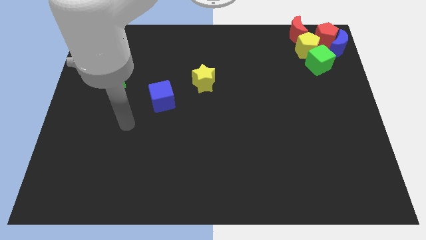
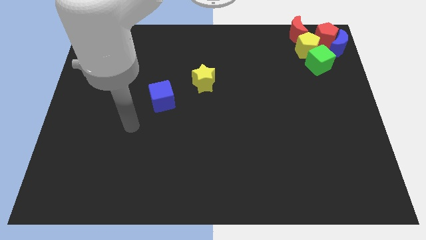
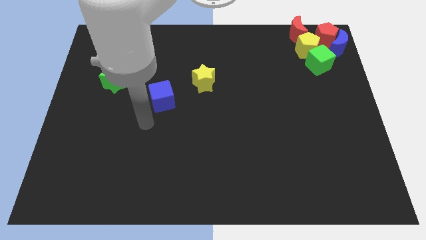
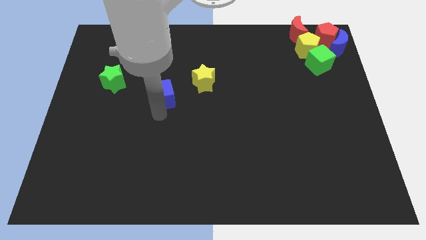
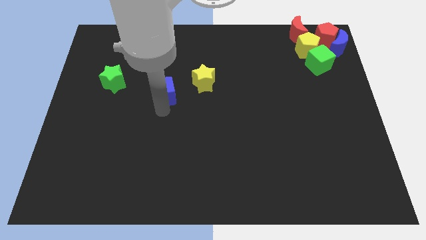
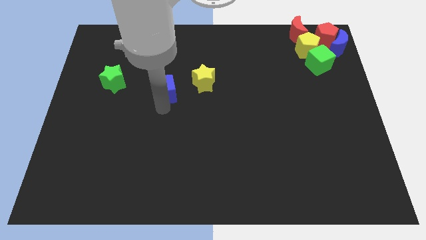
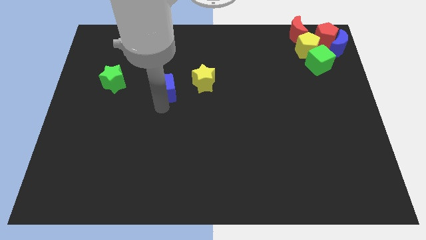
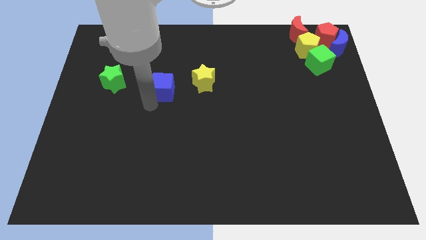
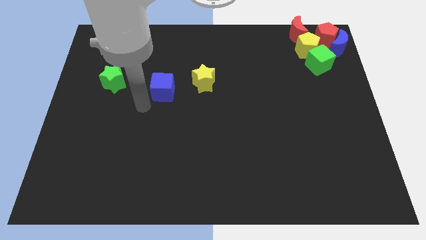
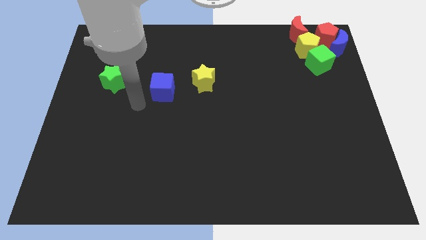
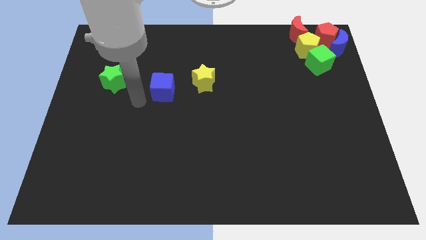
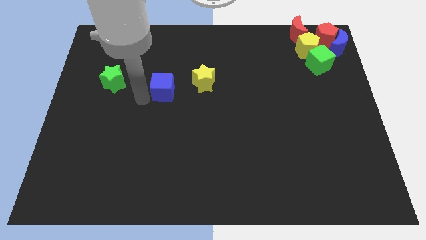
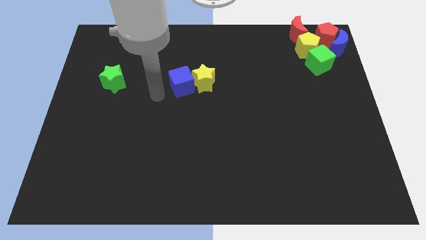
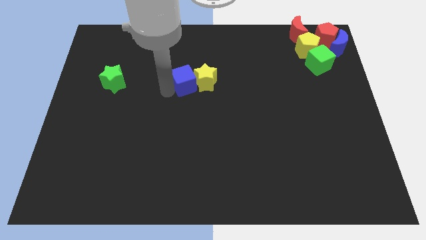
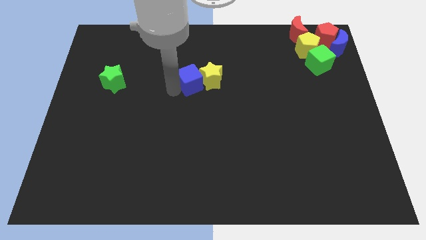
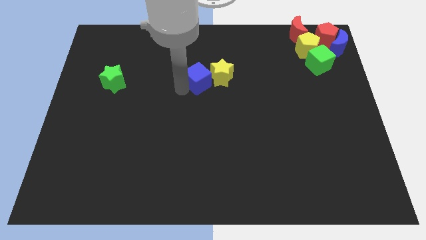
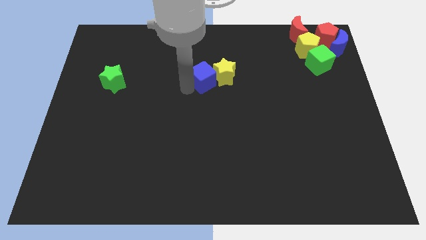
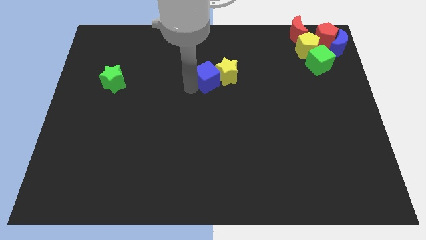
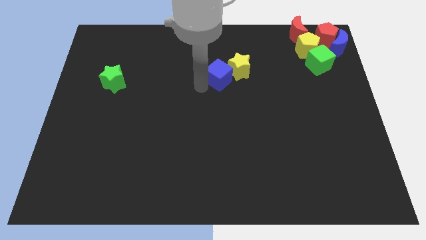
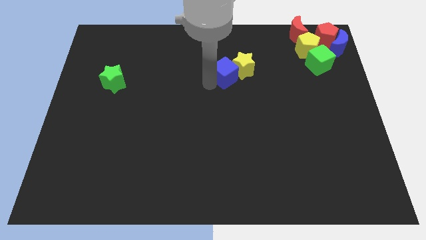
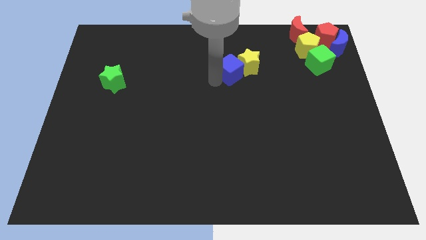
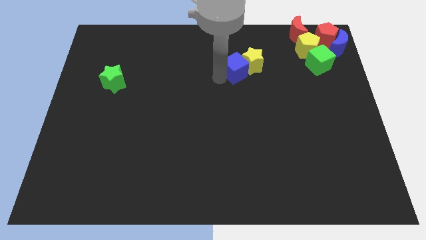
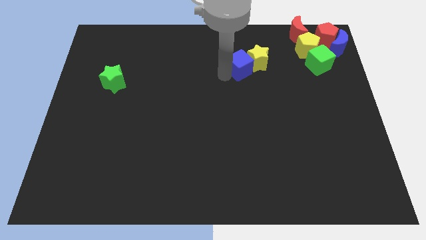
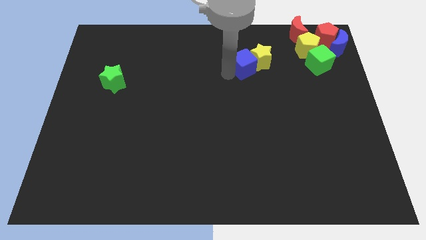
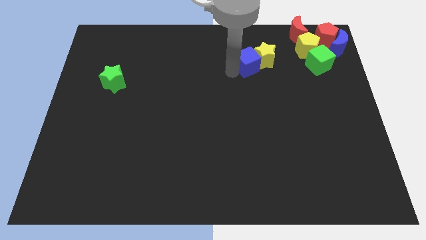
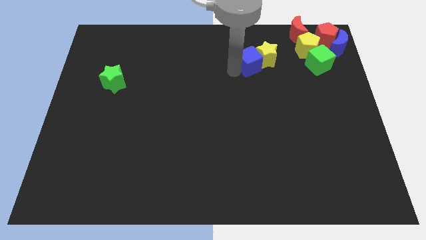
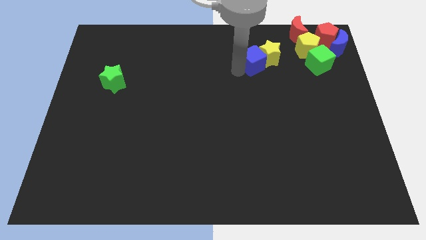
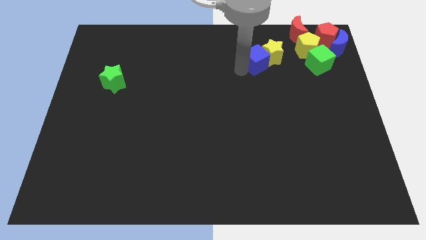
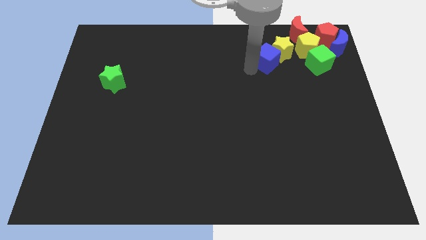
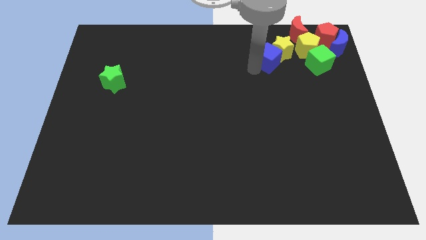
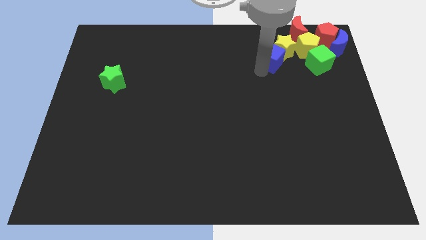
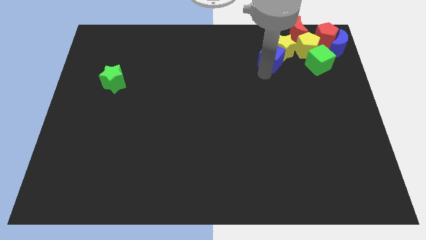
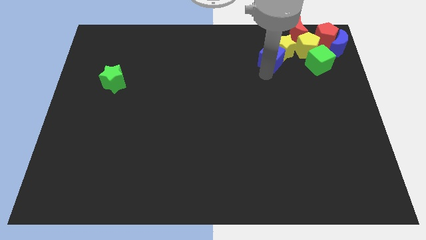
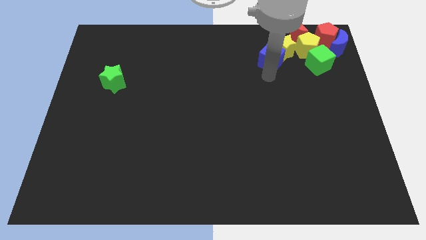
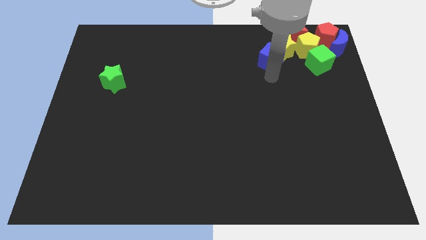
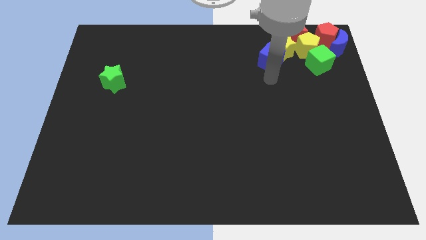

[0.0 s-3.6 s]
move the blue cube into the yellow star

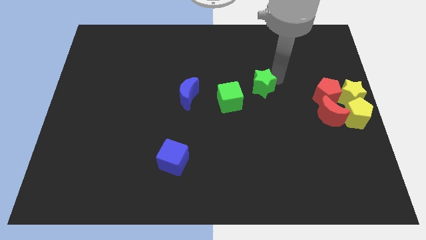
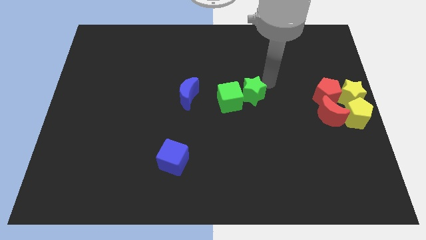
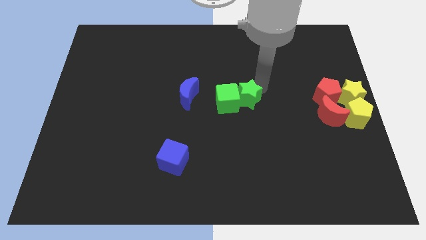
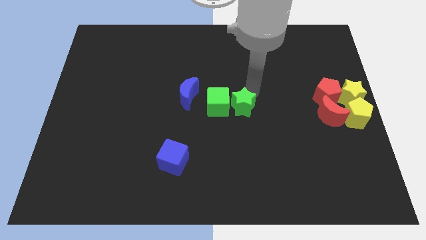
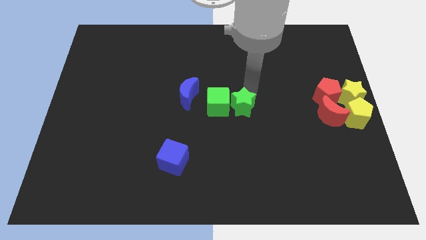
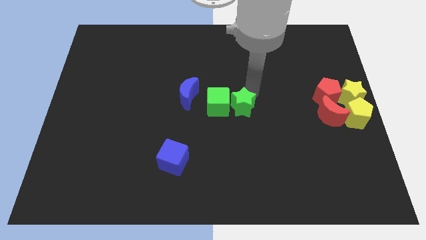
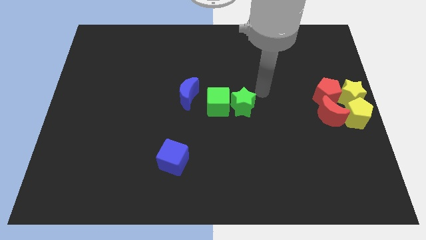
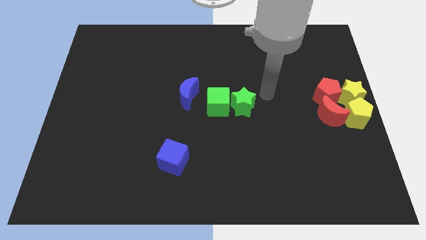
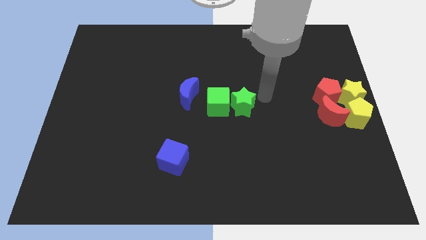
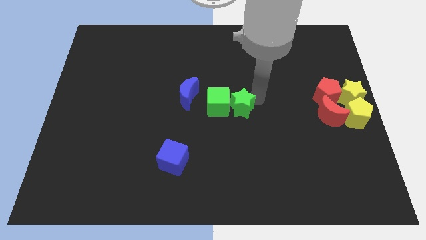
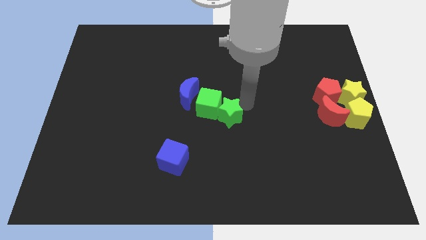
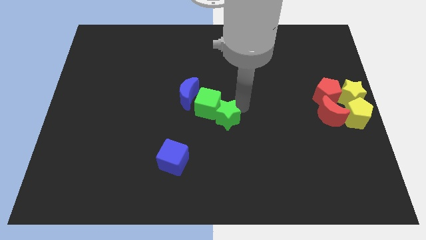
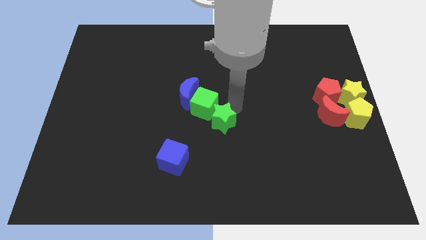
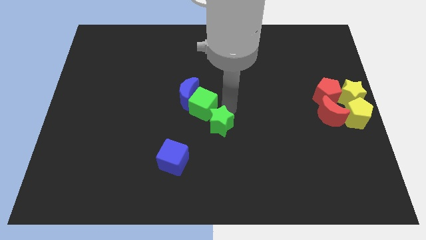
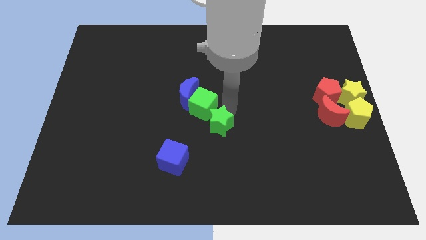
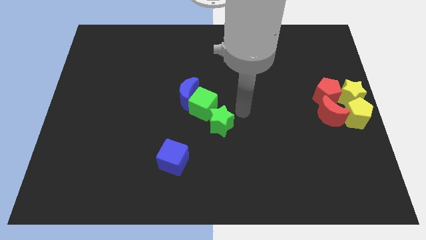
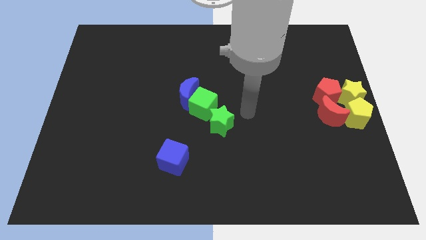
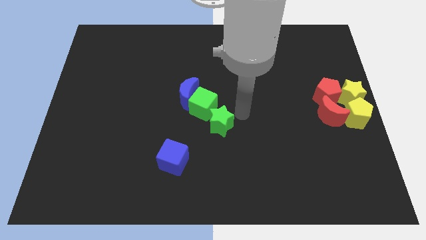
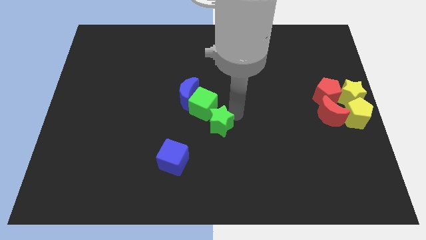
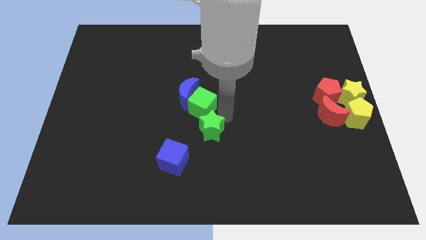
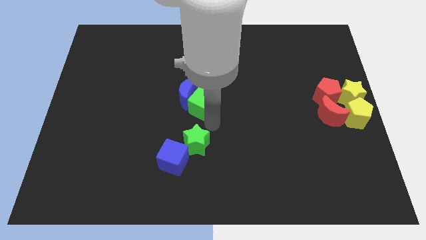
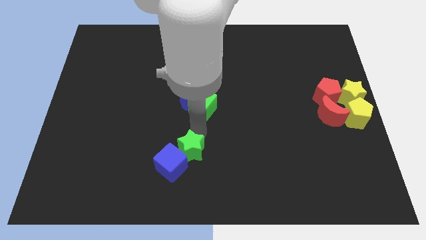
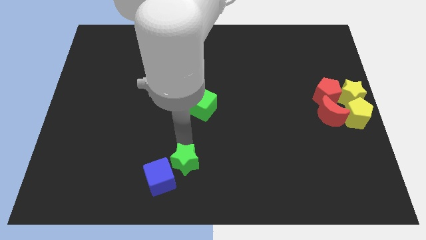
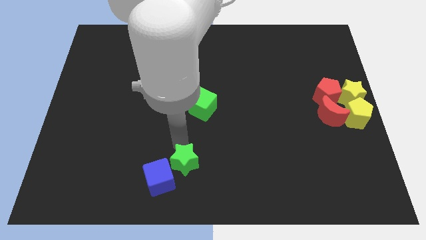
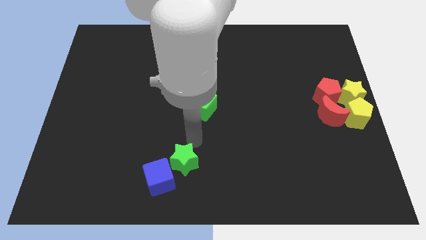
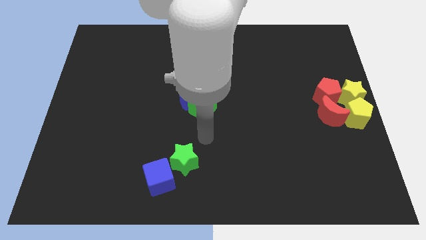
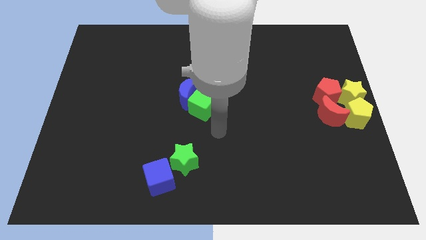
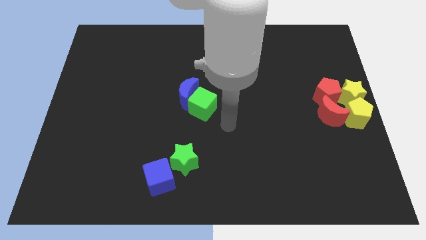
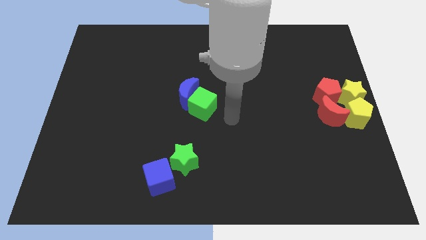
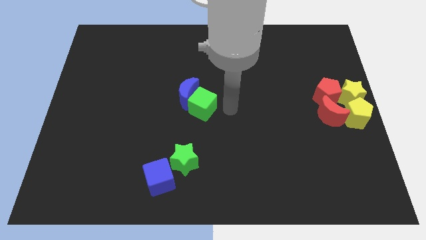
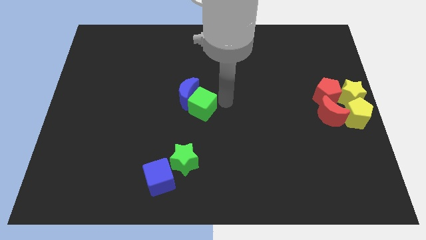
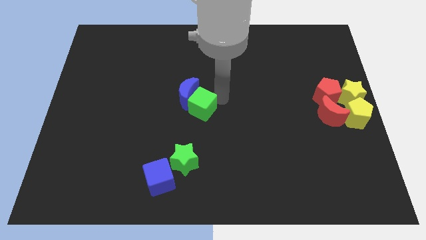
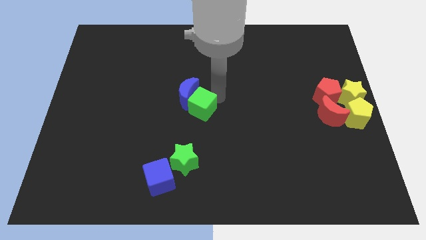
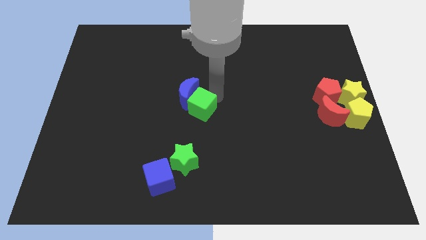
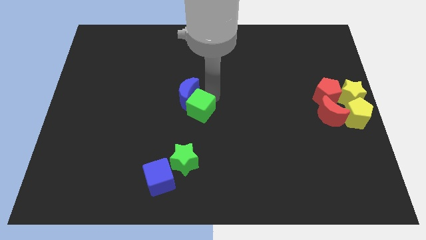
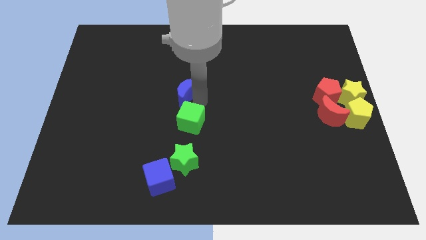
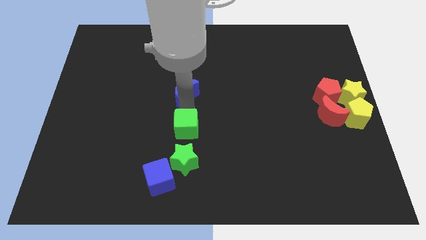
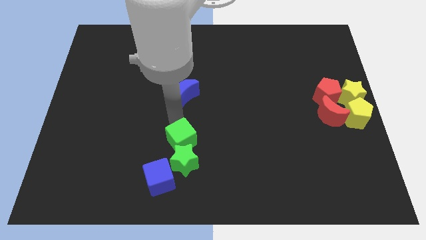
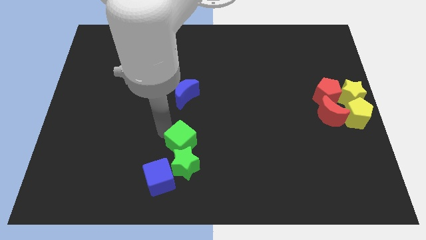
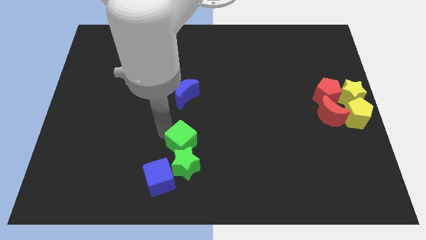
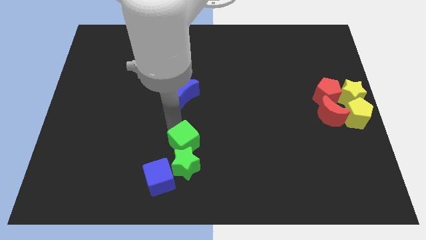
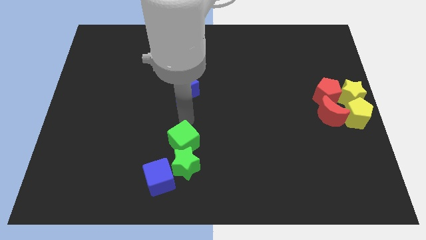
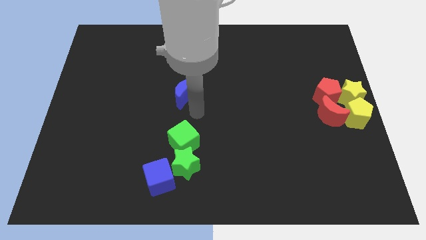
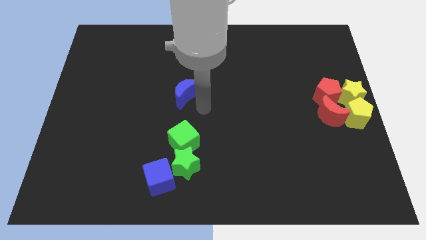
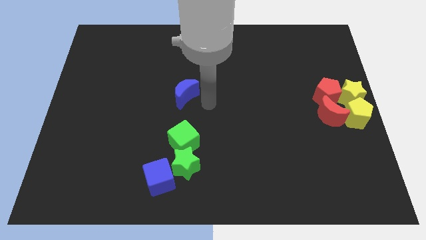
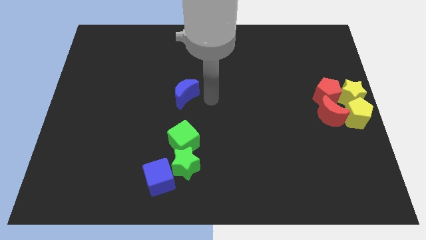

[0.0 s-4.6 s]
push green star and green cube to the top right of blue cube

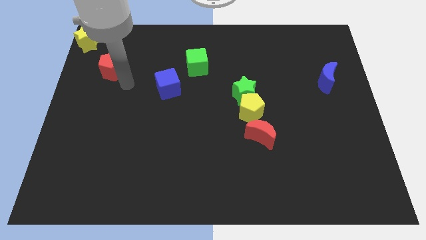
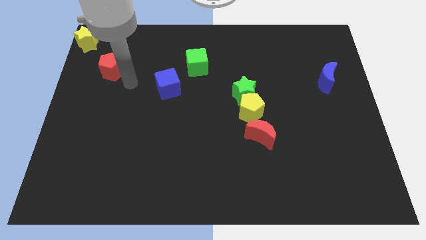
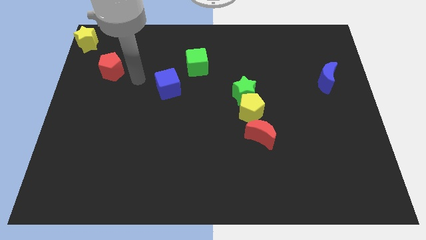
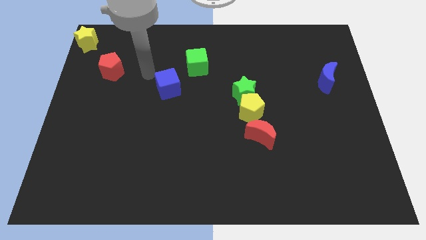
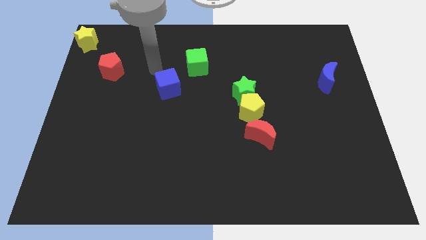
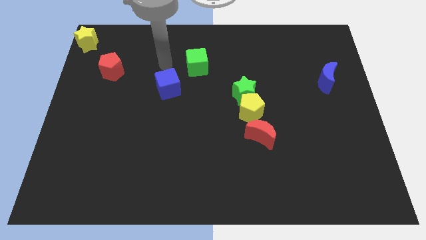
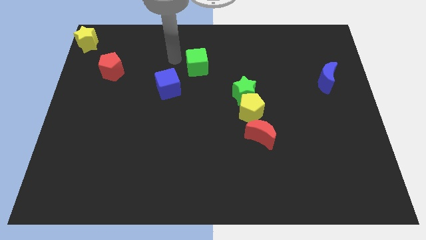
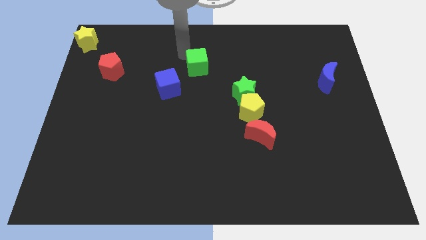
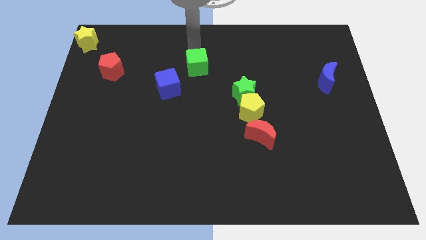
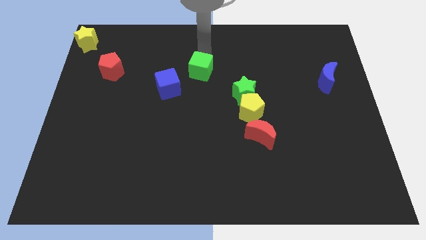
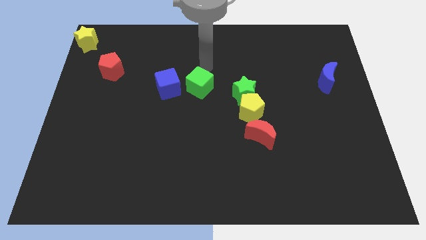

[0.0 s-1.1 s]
push the green cube to the right of the blue cube
